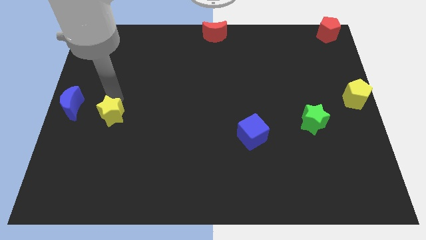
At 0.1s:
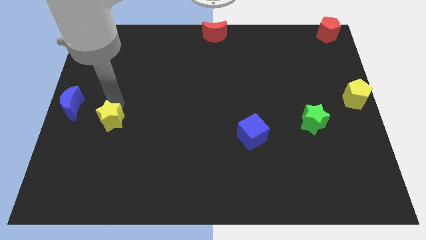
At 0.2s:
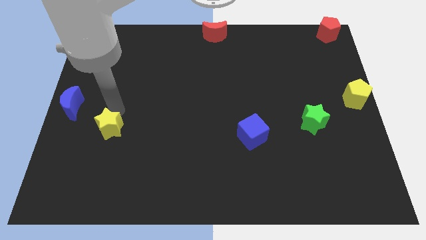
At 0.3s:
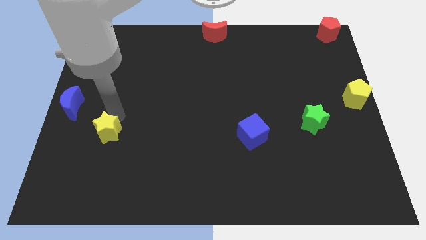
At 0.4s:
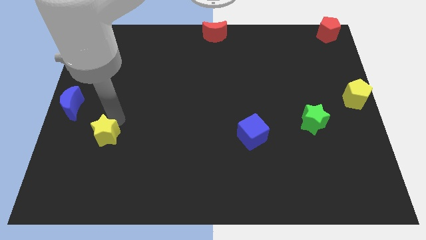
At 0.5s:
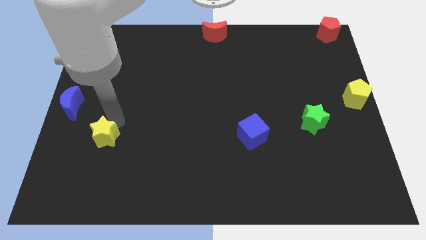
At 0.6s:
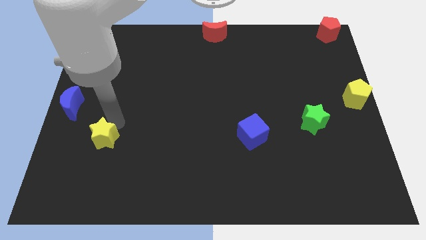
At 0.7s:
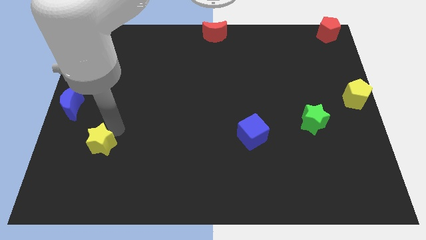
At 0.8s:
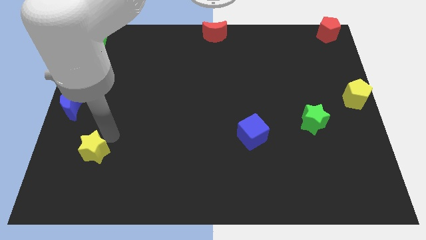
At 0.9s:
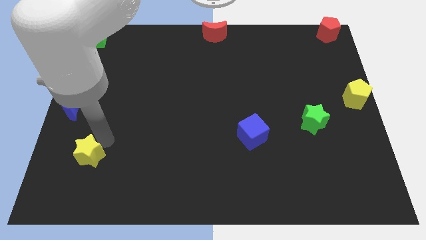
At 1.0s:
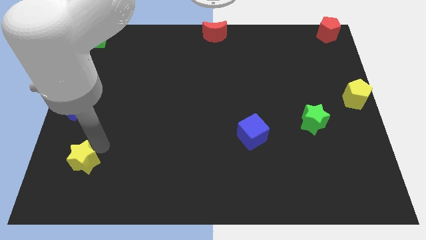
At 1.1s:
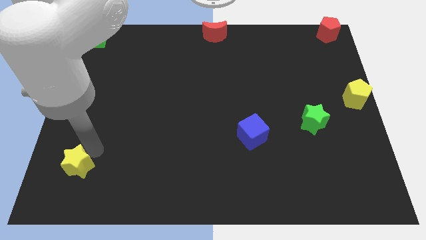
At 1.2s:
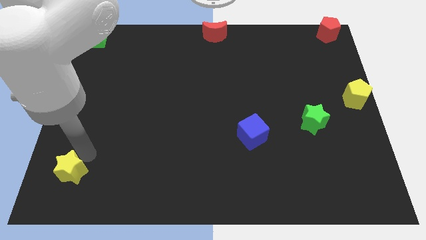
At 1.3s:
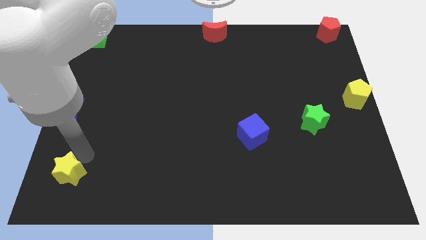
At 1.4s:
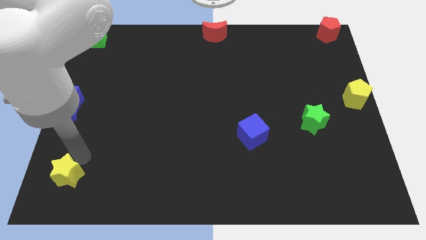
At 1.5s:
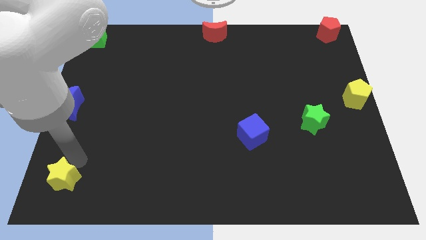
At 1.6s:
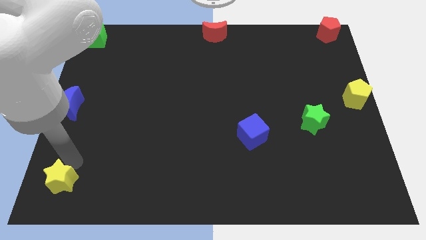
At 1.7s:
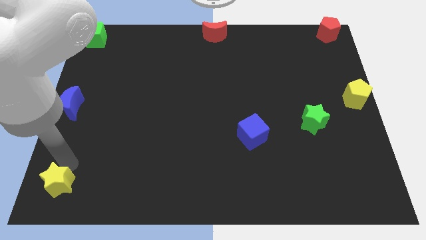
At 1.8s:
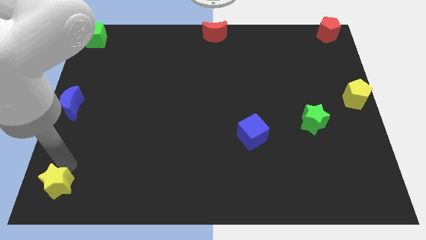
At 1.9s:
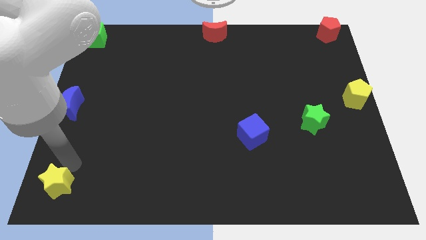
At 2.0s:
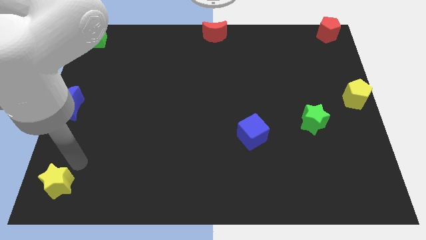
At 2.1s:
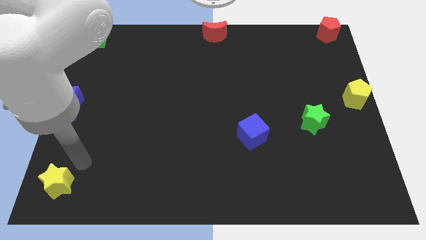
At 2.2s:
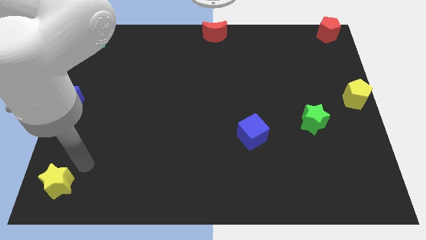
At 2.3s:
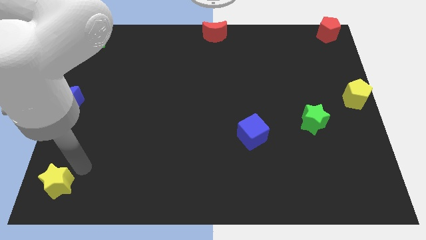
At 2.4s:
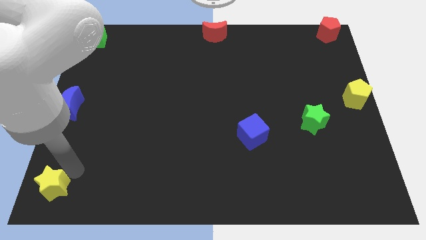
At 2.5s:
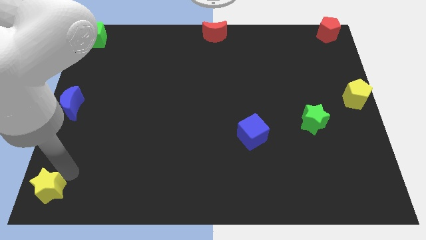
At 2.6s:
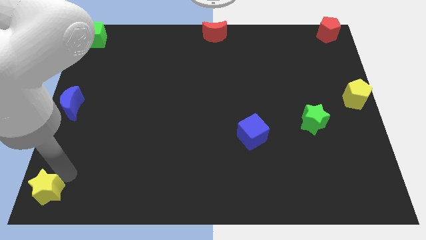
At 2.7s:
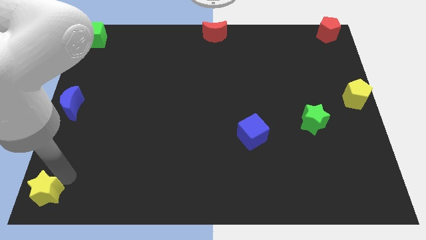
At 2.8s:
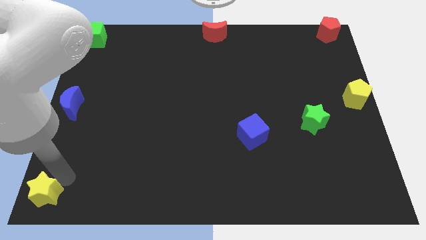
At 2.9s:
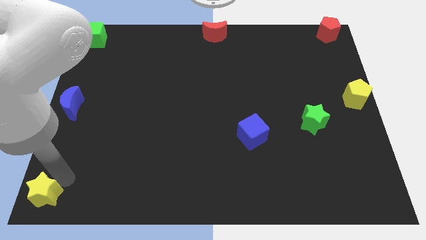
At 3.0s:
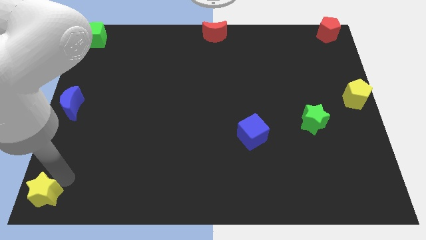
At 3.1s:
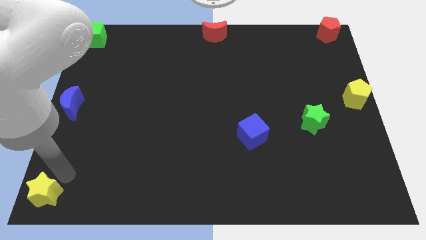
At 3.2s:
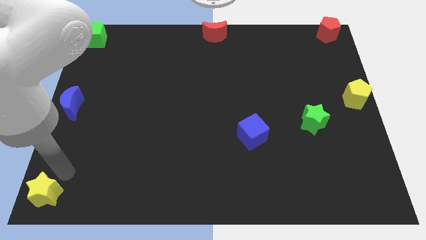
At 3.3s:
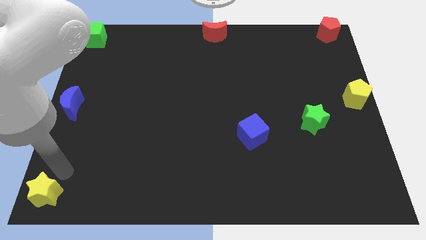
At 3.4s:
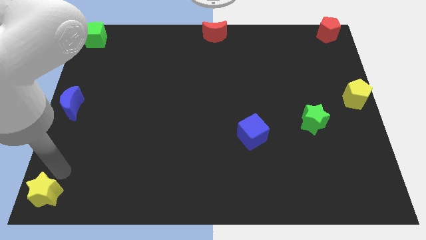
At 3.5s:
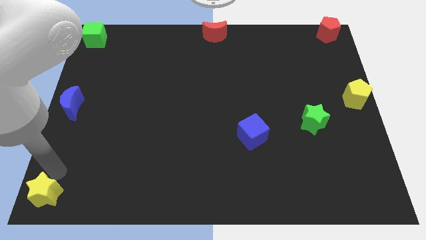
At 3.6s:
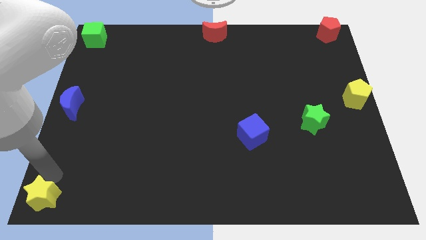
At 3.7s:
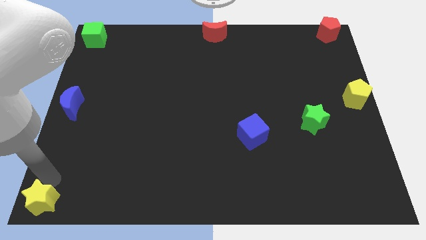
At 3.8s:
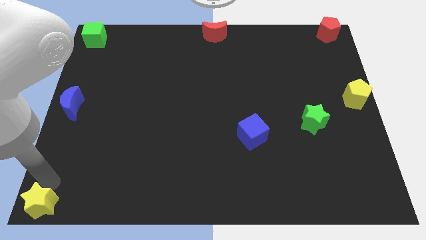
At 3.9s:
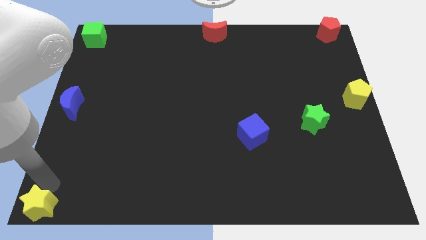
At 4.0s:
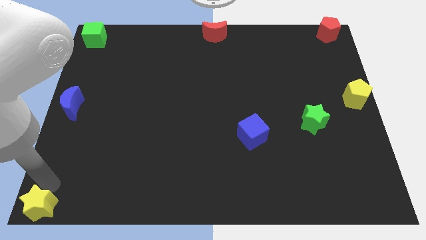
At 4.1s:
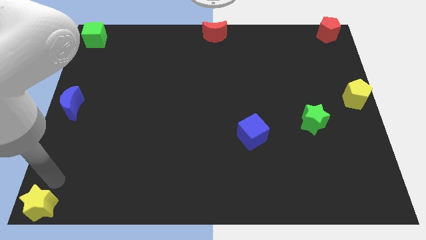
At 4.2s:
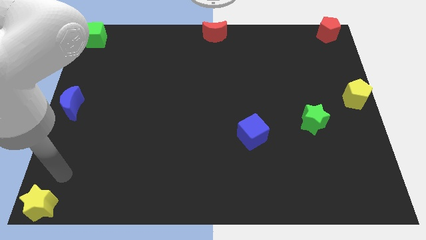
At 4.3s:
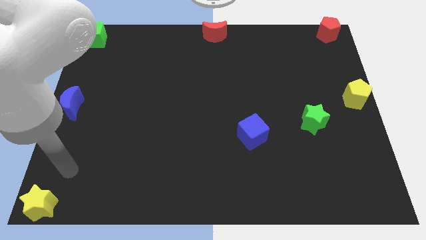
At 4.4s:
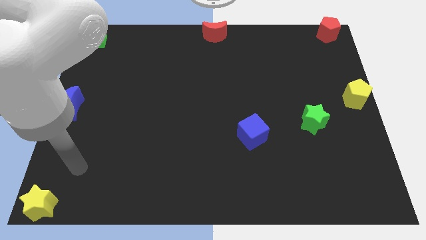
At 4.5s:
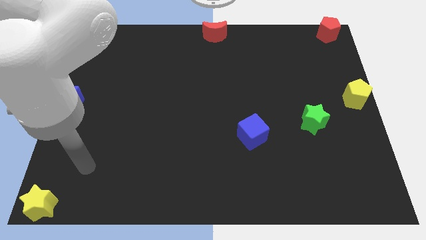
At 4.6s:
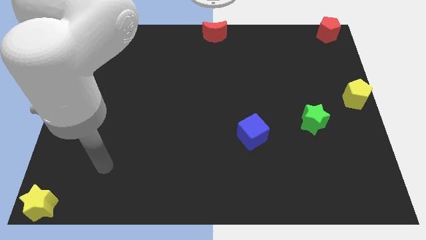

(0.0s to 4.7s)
slide the yellow star to the bottom left corner

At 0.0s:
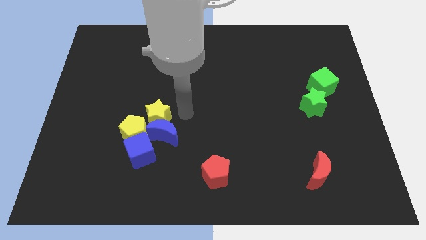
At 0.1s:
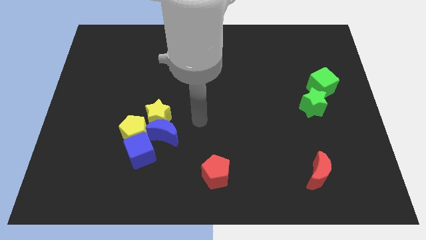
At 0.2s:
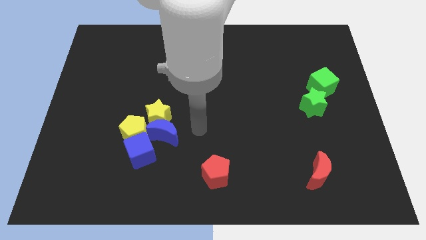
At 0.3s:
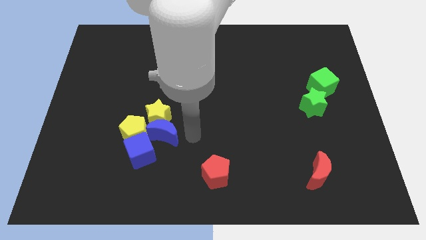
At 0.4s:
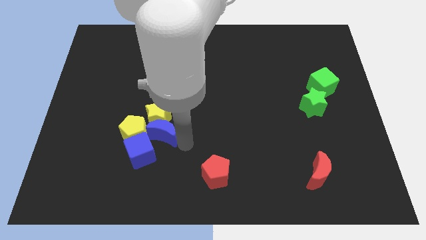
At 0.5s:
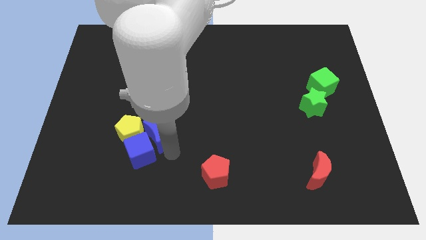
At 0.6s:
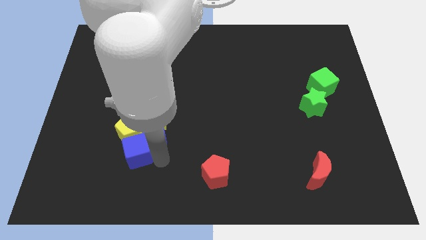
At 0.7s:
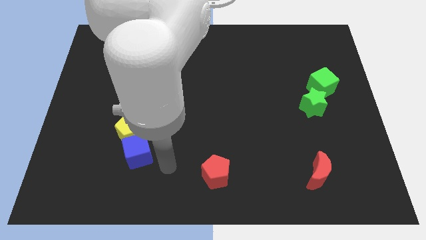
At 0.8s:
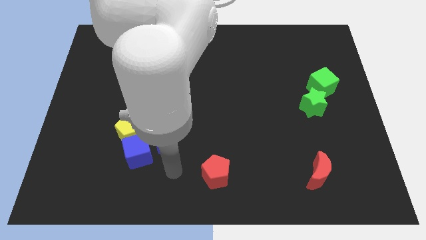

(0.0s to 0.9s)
push the blue crescent to the right of the blue cube

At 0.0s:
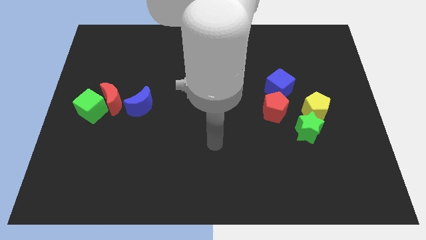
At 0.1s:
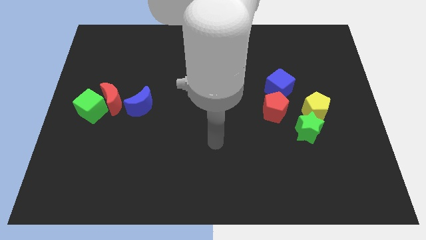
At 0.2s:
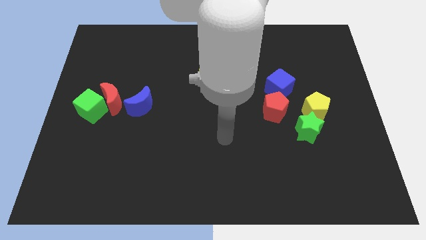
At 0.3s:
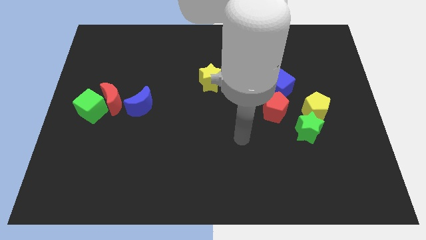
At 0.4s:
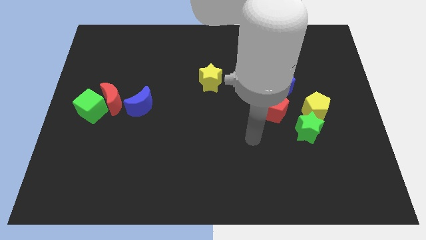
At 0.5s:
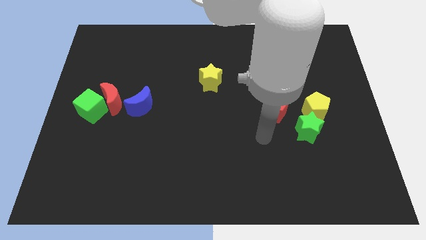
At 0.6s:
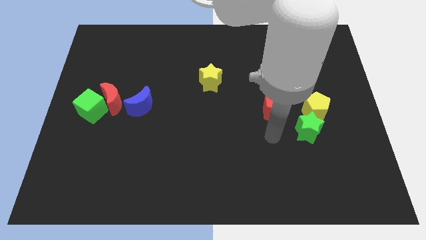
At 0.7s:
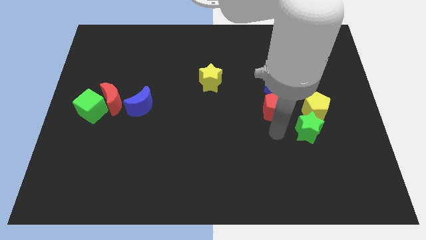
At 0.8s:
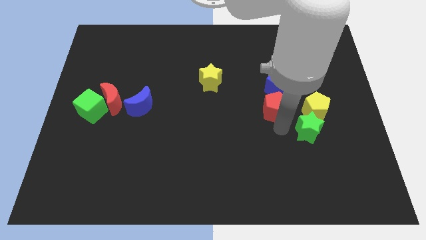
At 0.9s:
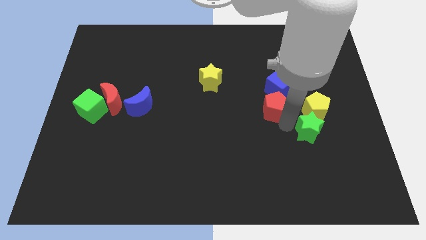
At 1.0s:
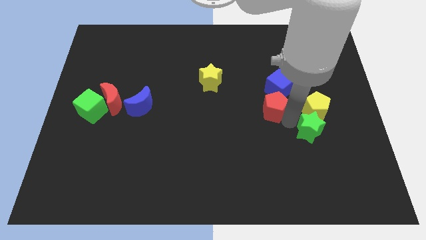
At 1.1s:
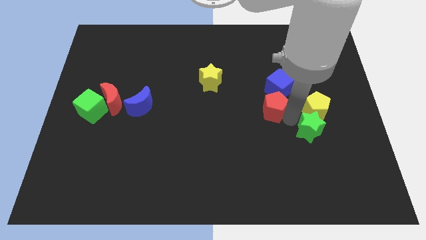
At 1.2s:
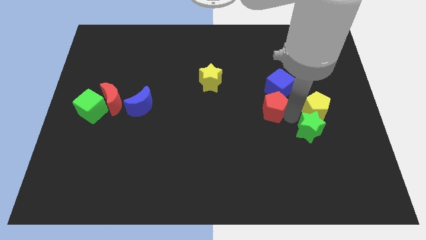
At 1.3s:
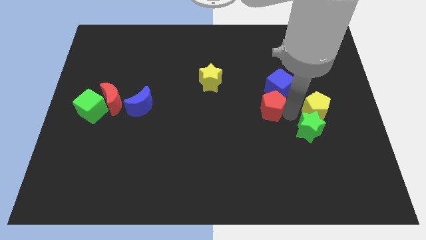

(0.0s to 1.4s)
point your arm at the right of the red pentagon

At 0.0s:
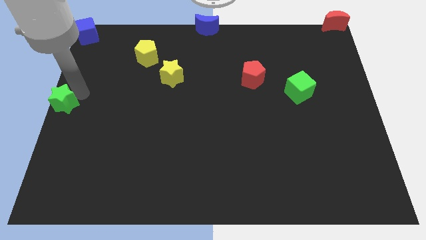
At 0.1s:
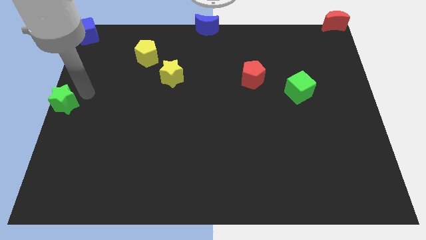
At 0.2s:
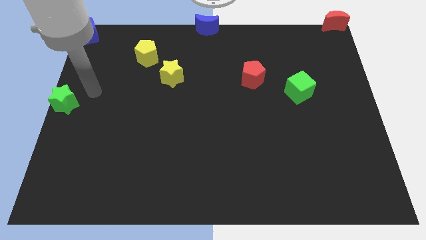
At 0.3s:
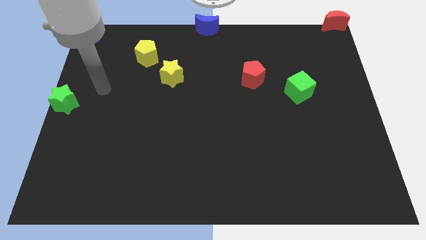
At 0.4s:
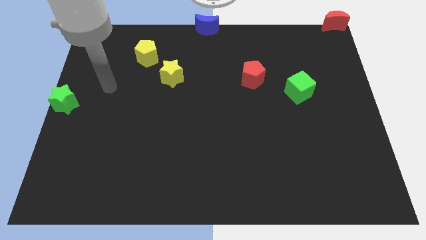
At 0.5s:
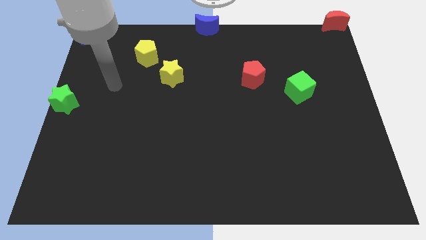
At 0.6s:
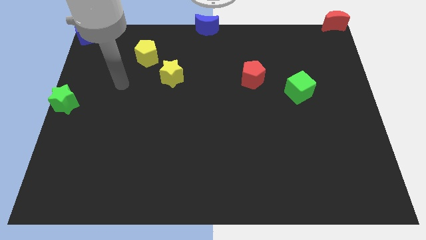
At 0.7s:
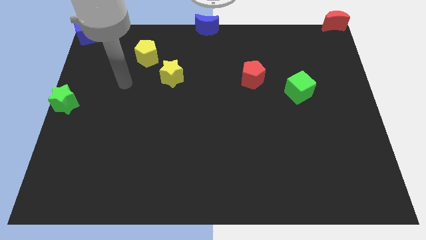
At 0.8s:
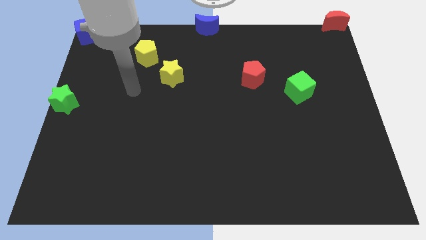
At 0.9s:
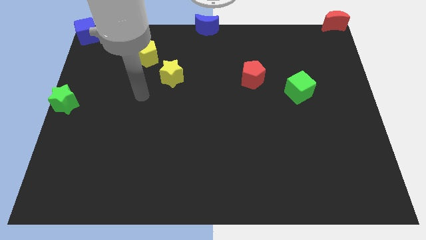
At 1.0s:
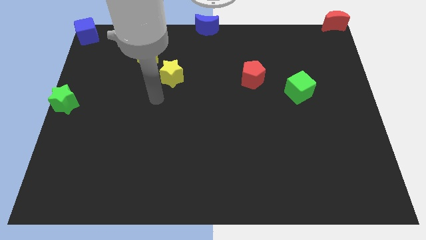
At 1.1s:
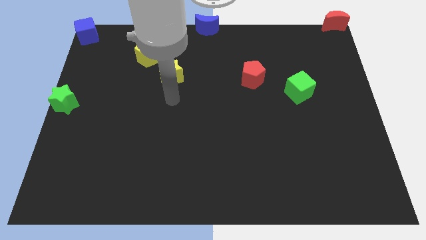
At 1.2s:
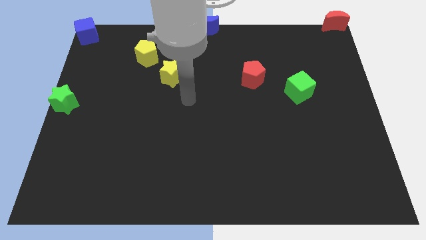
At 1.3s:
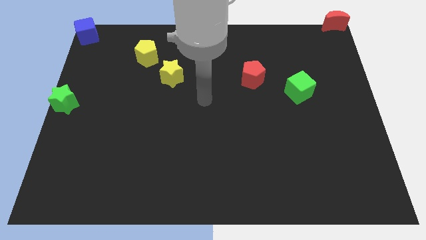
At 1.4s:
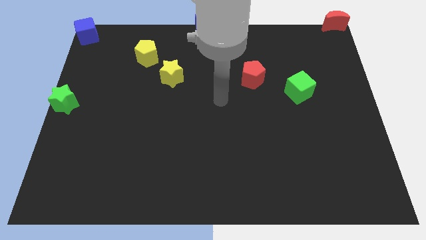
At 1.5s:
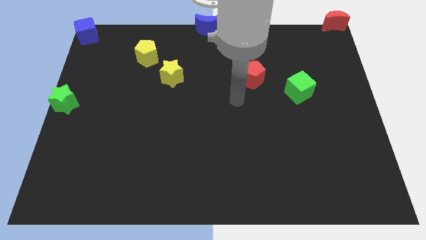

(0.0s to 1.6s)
move the arm away from the green star

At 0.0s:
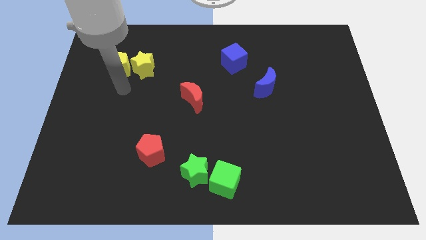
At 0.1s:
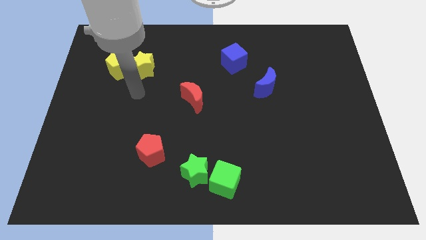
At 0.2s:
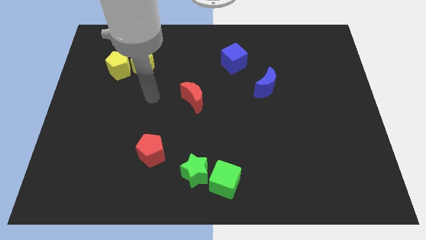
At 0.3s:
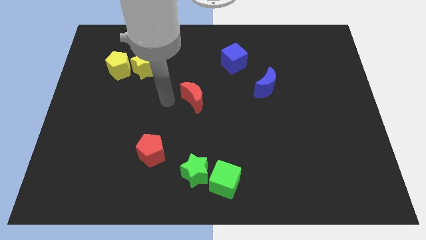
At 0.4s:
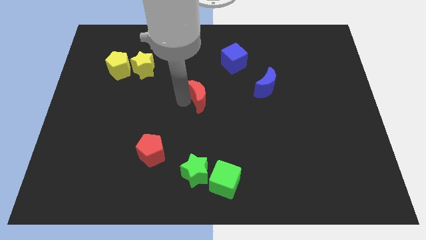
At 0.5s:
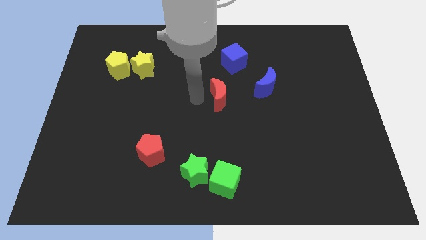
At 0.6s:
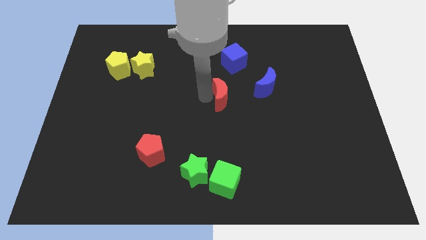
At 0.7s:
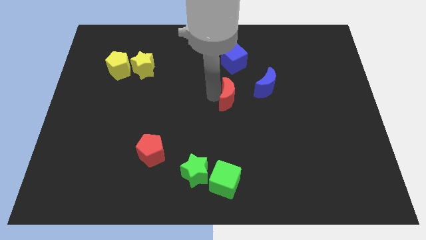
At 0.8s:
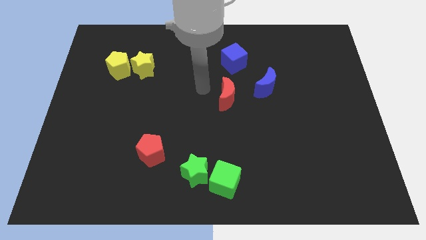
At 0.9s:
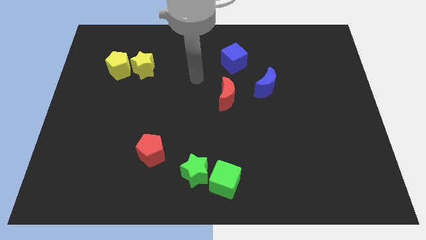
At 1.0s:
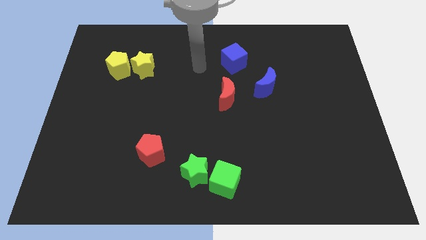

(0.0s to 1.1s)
move the red moon below to the blue cube
